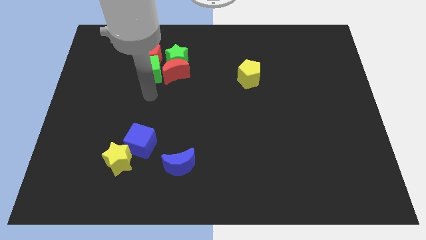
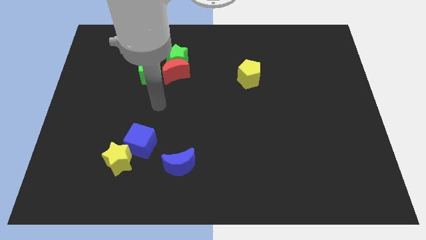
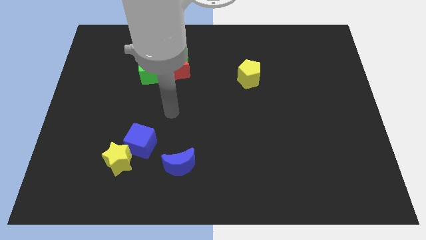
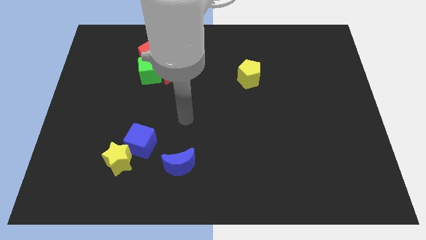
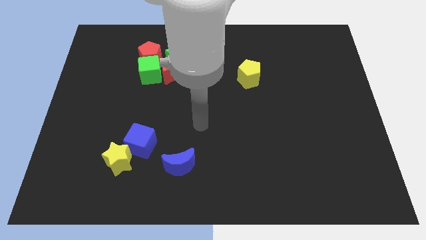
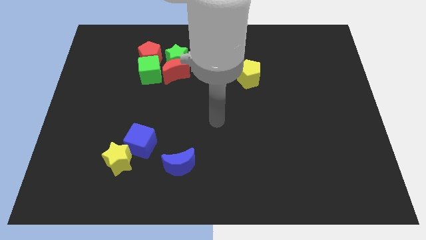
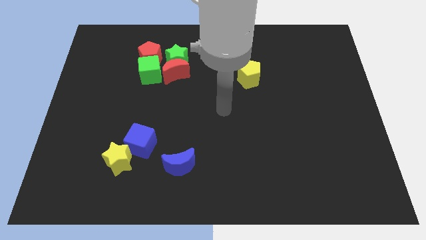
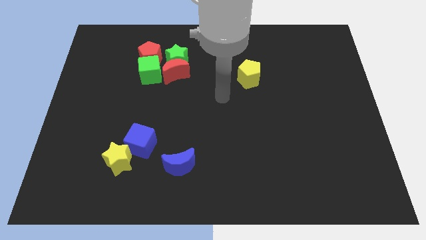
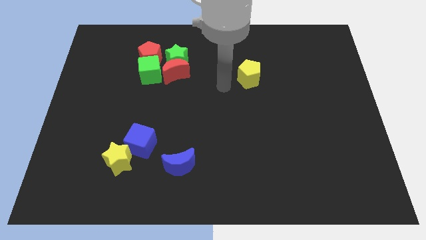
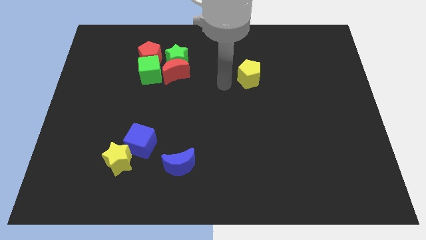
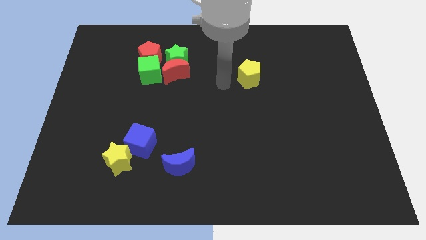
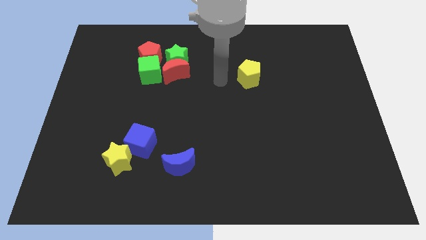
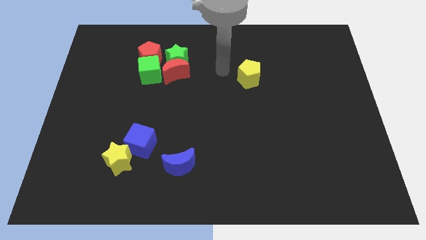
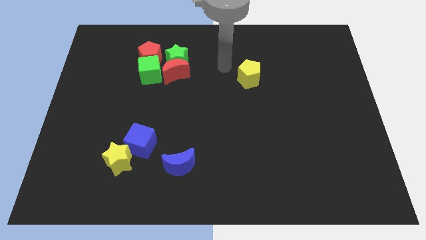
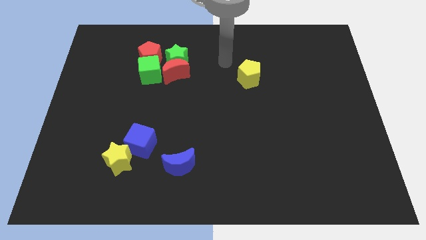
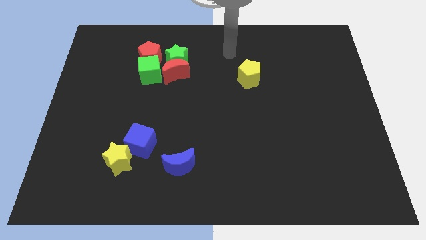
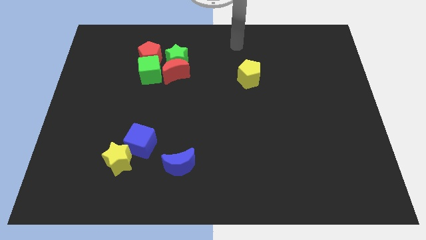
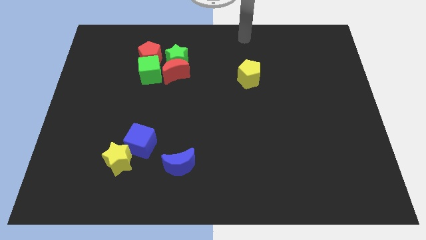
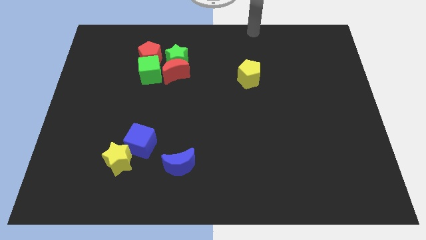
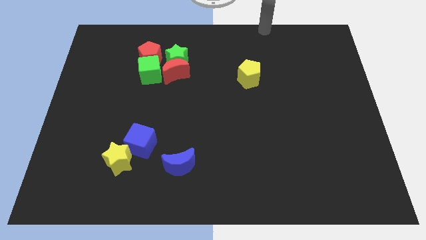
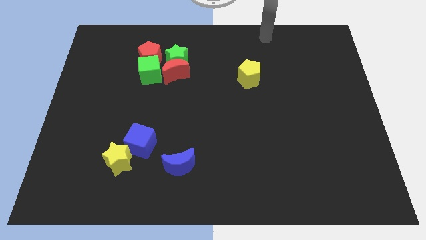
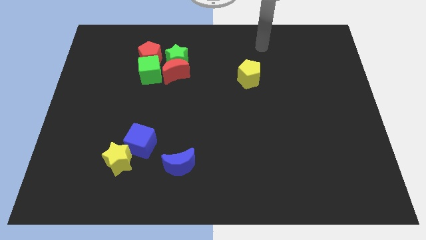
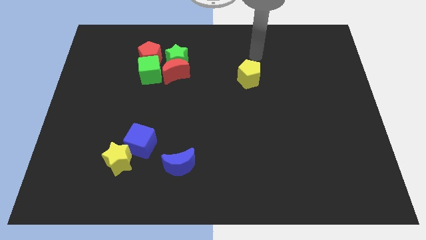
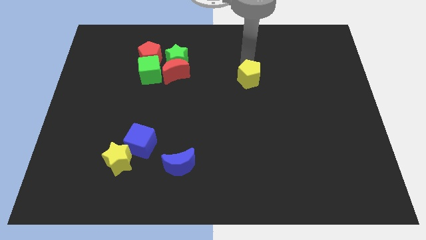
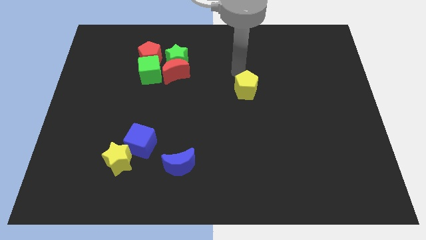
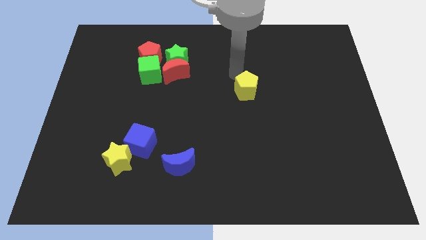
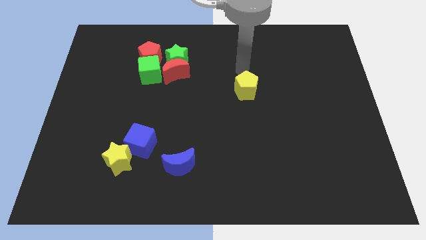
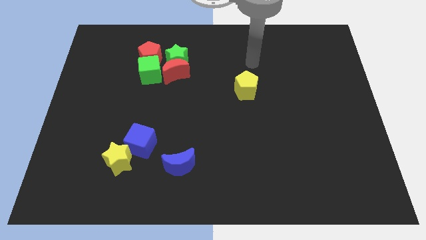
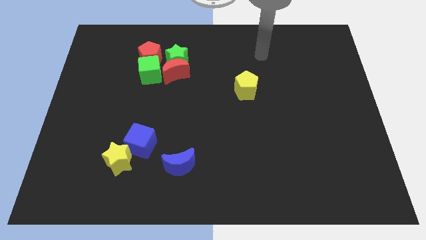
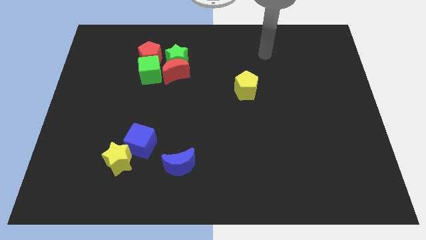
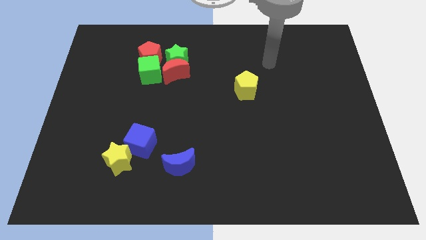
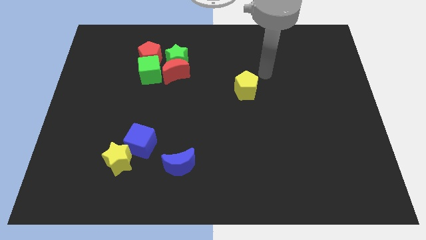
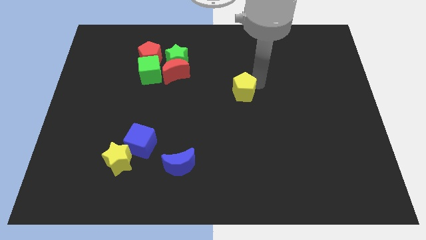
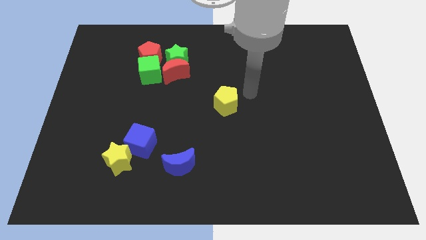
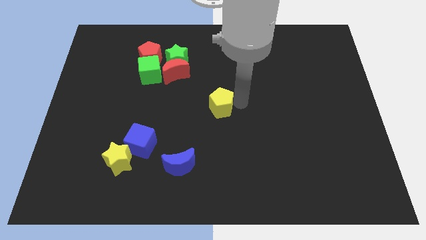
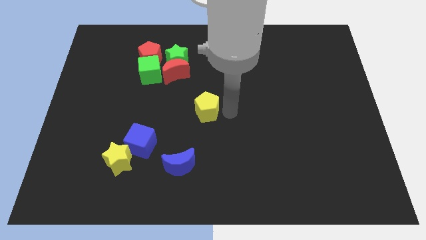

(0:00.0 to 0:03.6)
push the yellow pentagon to the centre of the board

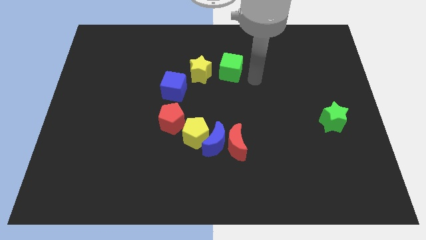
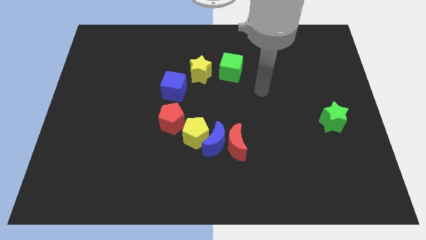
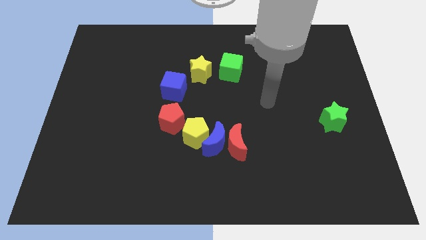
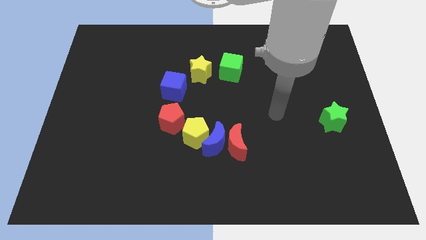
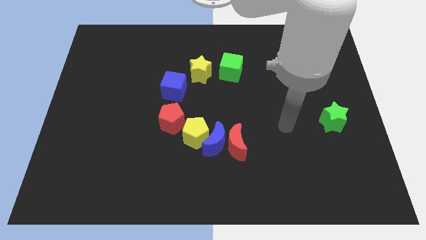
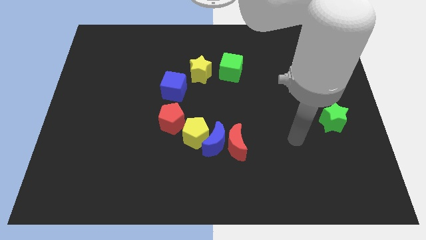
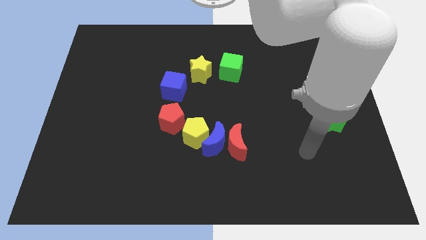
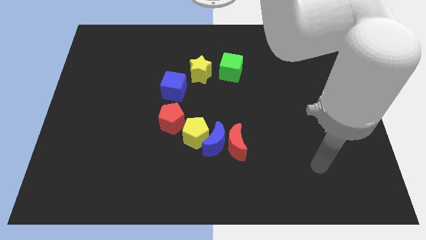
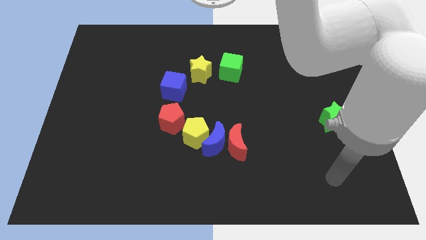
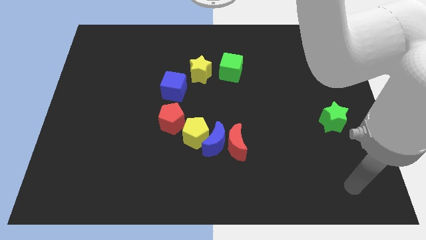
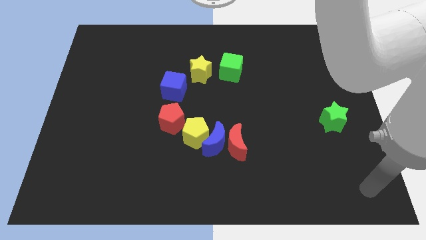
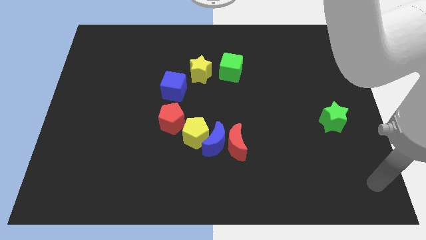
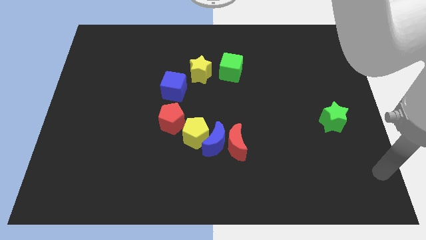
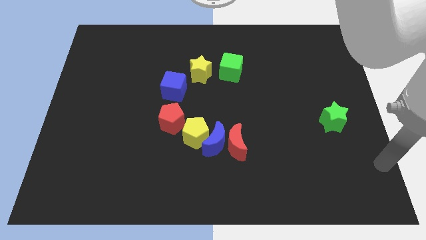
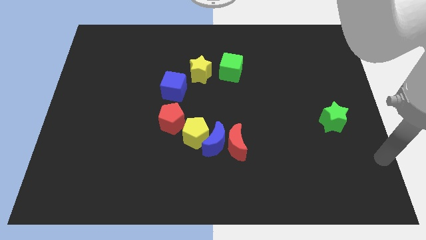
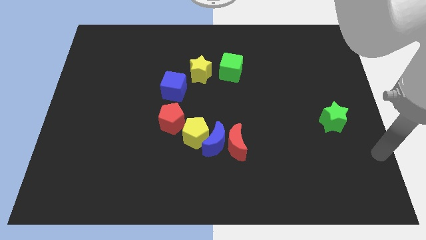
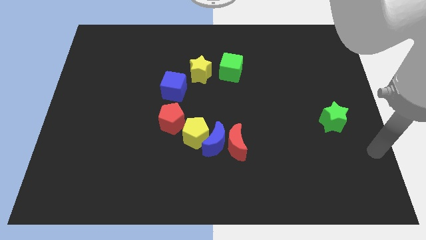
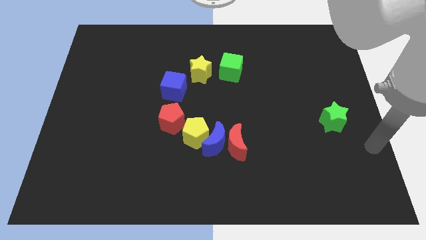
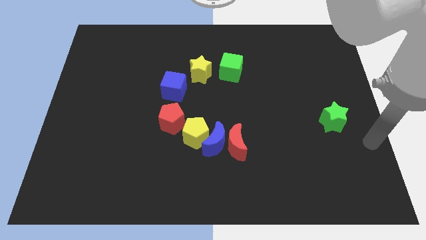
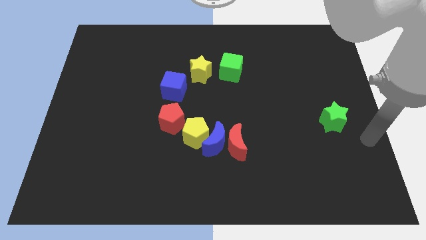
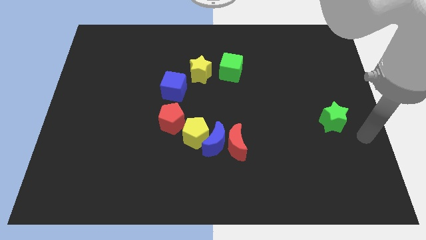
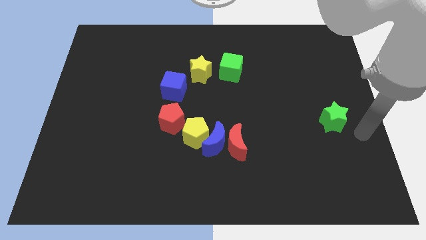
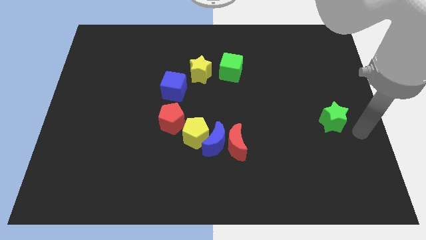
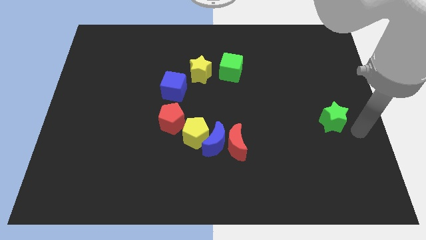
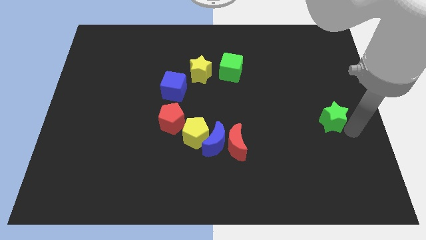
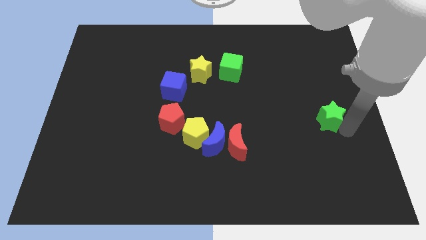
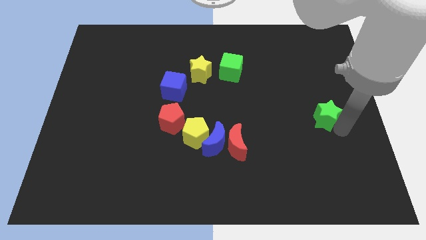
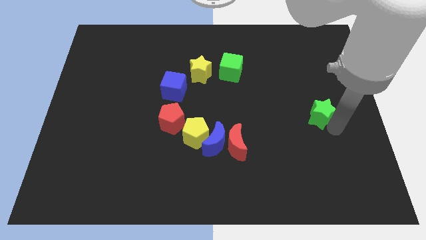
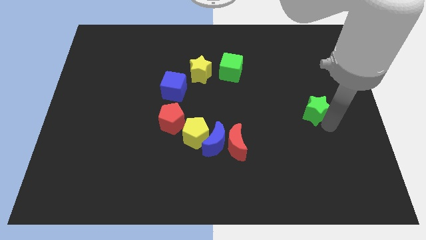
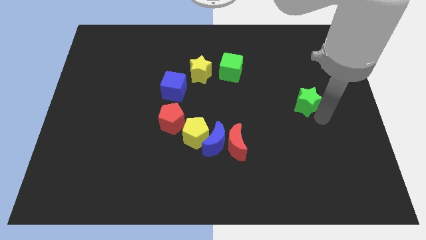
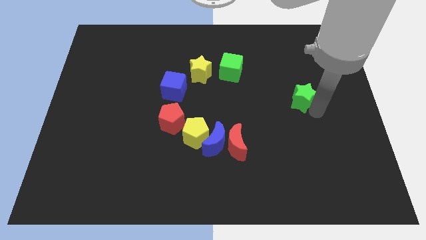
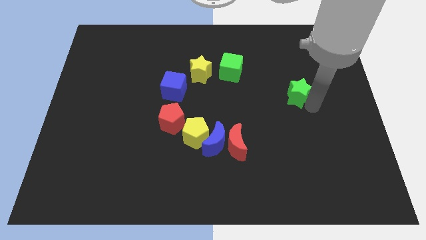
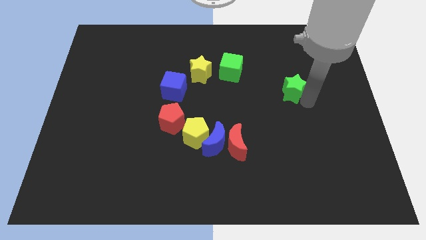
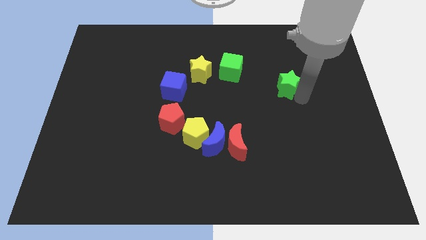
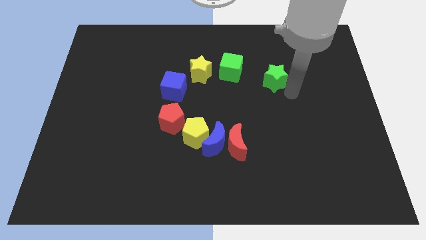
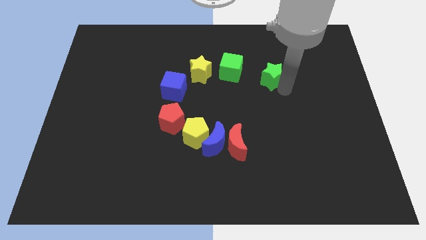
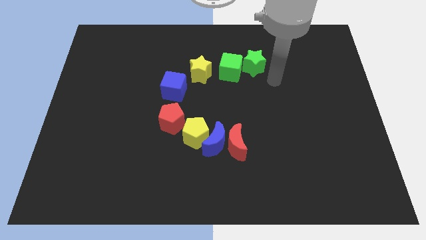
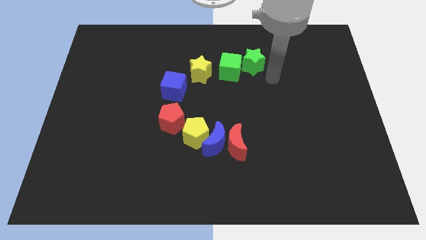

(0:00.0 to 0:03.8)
move your arm away from the green cube

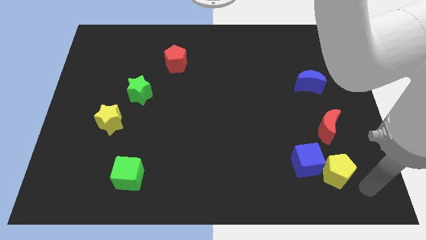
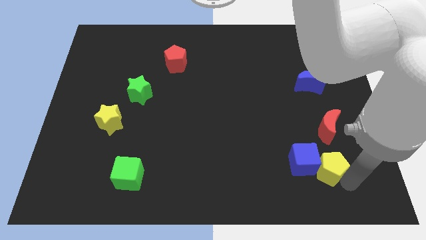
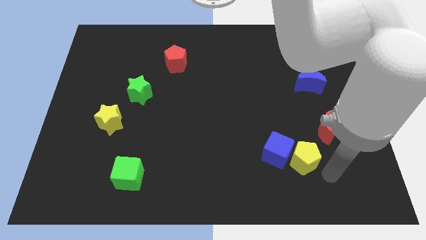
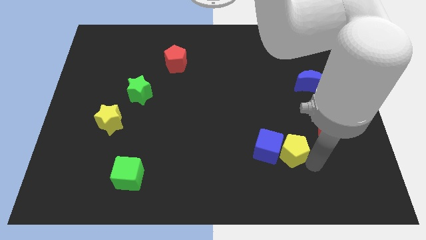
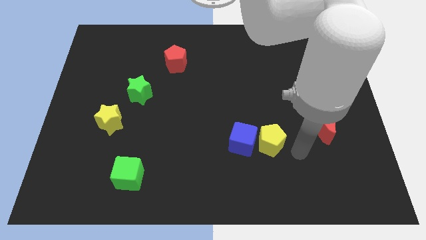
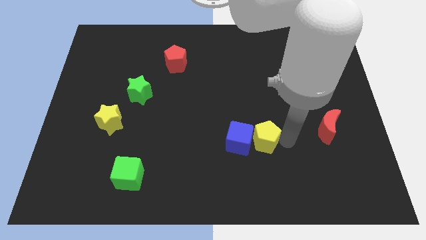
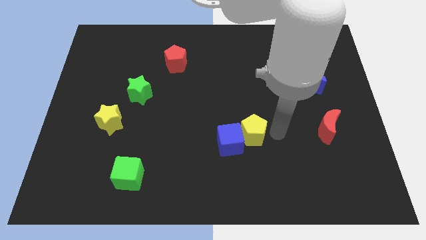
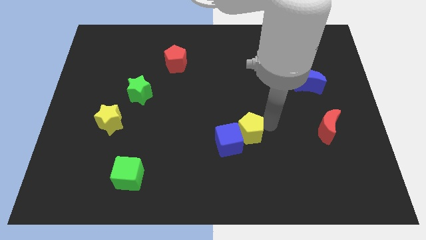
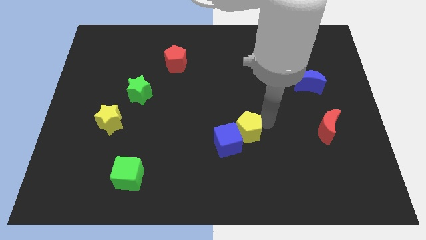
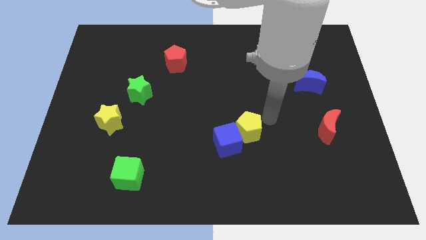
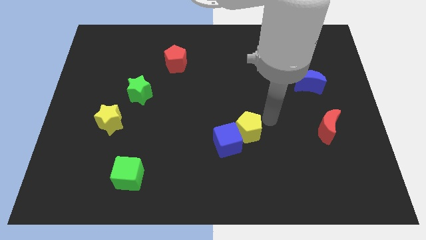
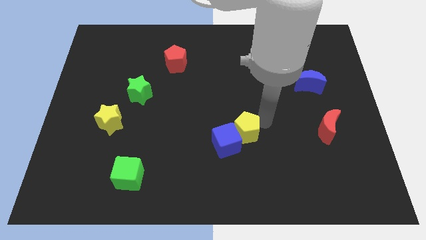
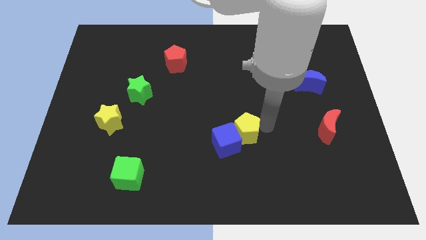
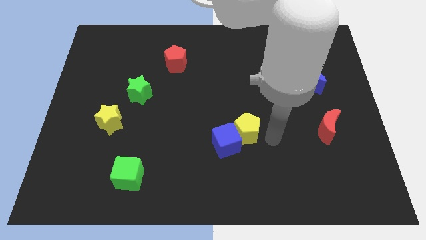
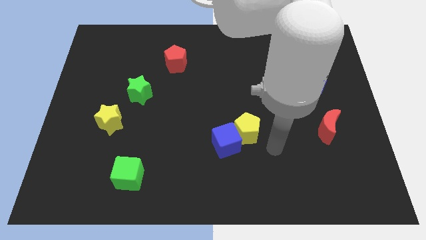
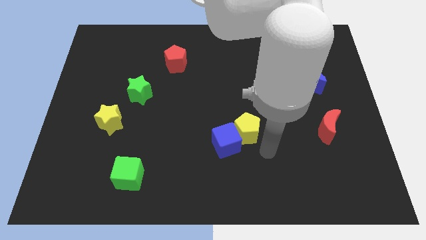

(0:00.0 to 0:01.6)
push the yellow pentagon into the blue cube
